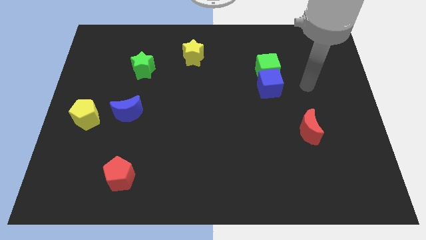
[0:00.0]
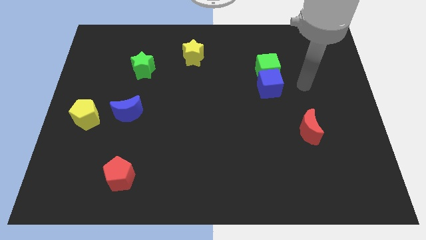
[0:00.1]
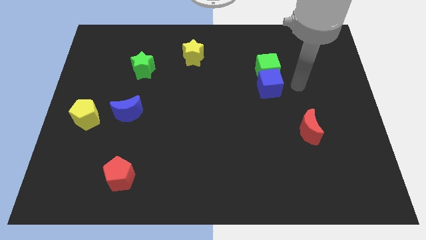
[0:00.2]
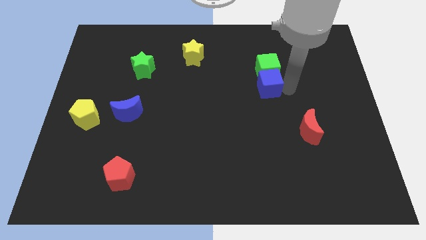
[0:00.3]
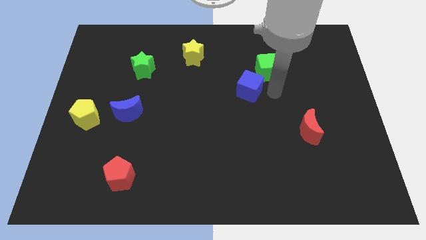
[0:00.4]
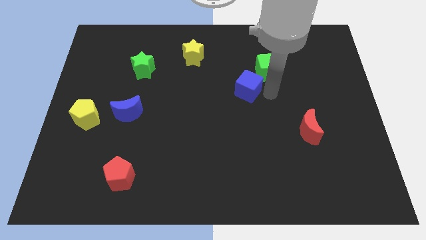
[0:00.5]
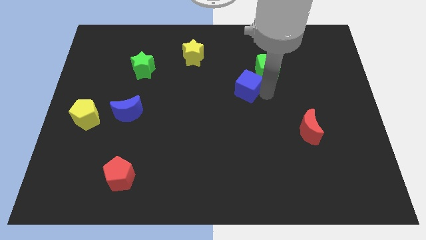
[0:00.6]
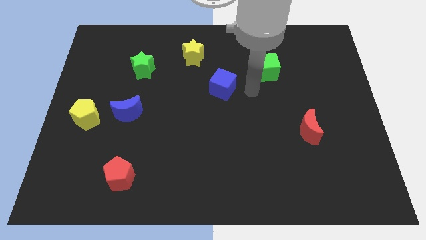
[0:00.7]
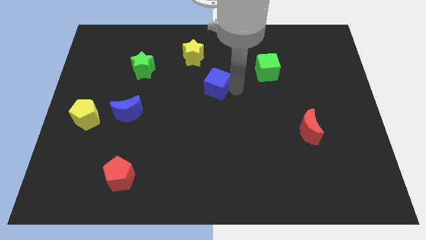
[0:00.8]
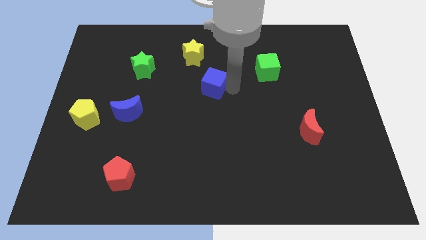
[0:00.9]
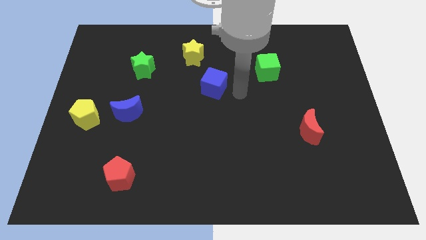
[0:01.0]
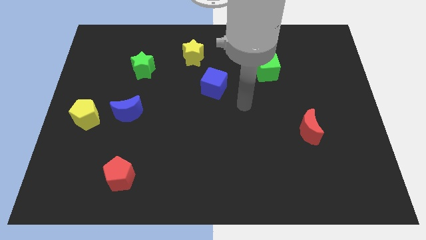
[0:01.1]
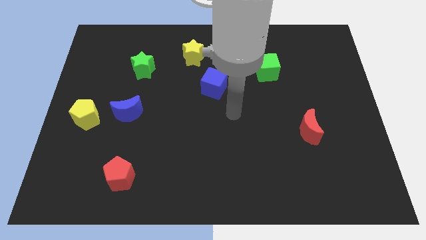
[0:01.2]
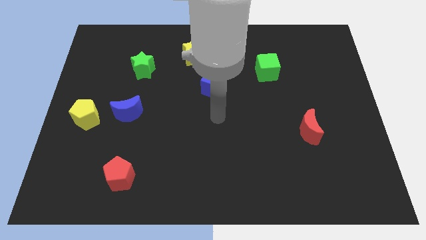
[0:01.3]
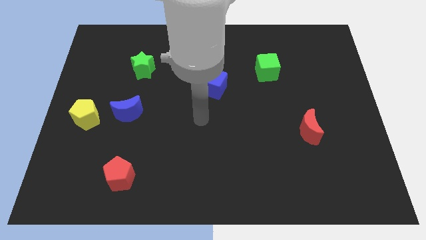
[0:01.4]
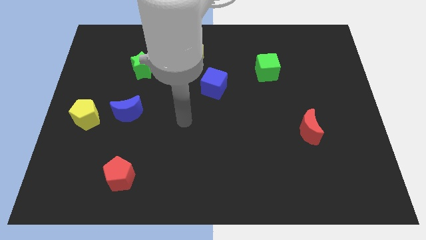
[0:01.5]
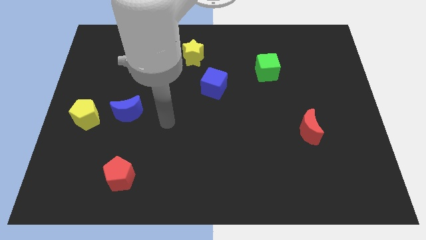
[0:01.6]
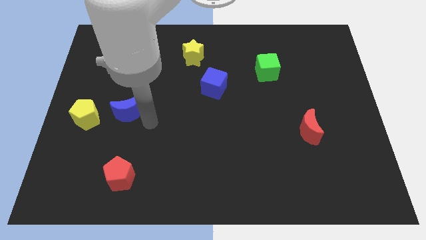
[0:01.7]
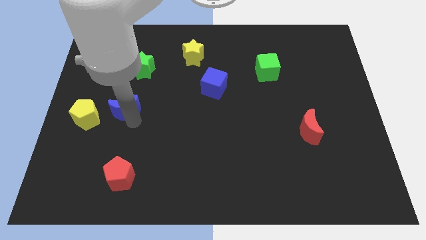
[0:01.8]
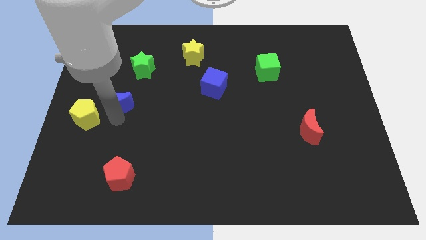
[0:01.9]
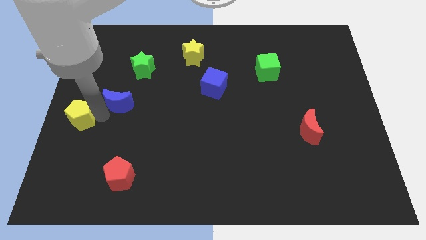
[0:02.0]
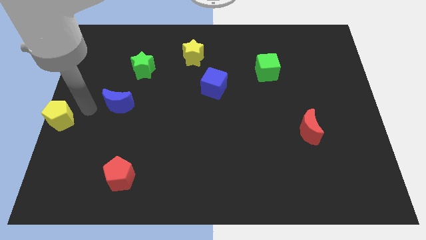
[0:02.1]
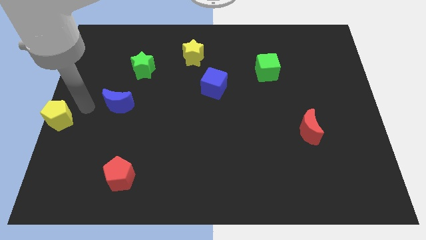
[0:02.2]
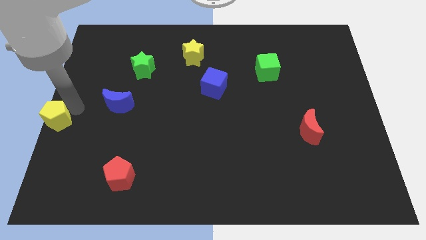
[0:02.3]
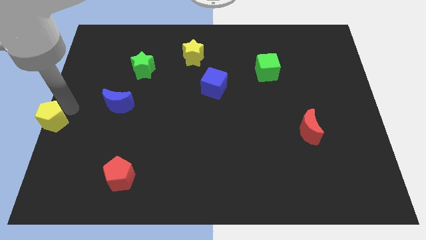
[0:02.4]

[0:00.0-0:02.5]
move your arm away from the blue cube

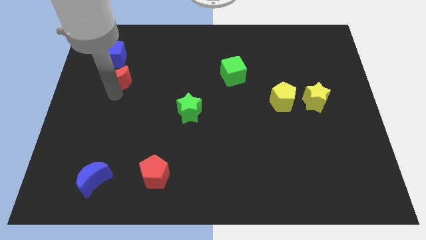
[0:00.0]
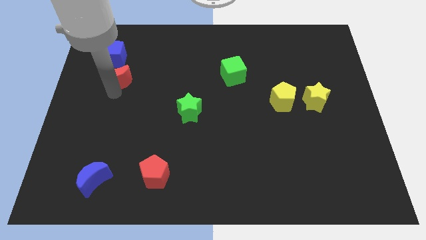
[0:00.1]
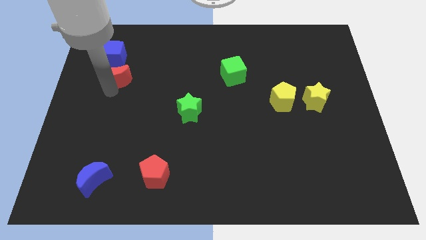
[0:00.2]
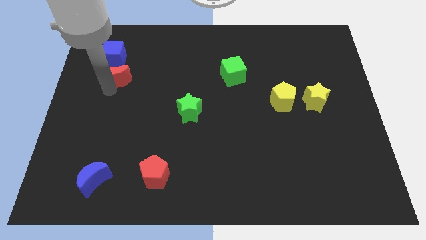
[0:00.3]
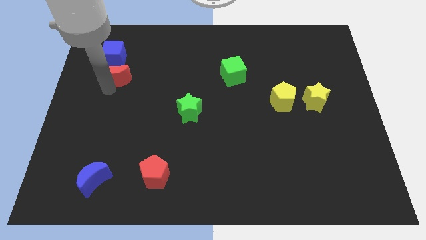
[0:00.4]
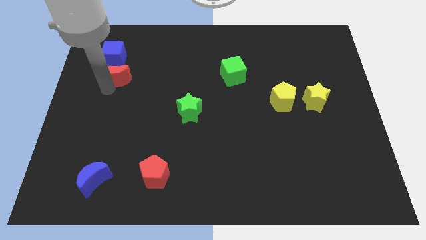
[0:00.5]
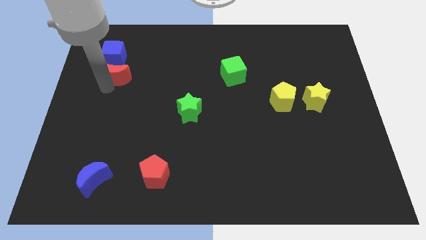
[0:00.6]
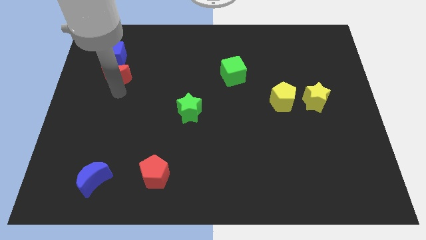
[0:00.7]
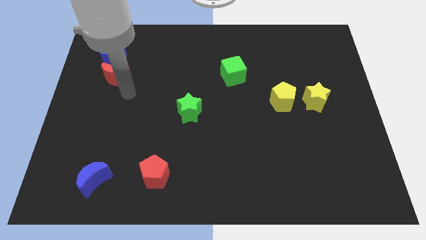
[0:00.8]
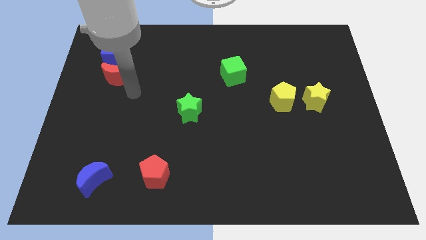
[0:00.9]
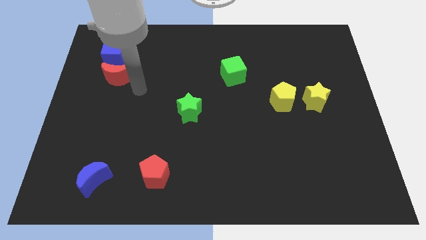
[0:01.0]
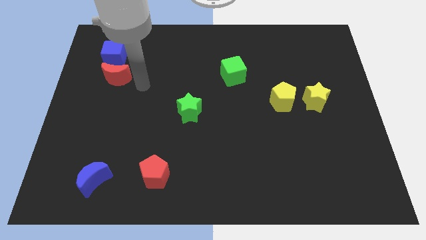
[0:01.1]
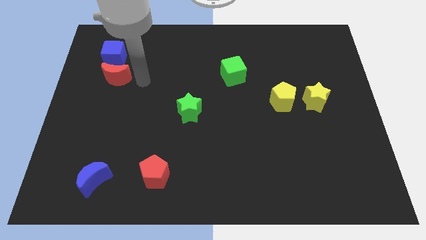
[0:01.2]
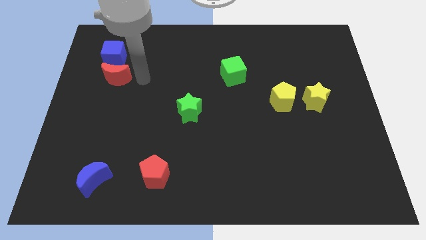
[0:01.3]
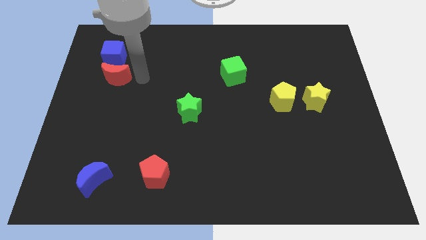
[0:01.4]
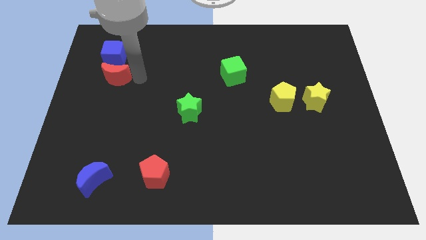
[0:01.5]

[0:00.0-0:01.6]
place the red crescent below the blue cube

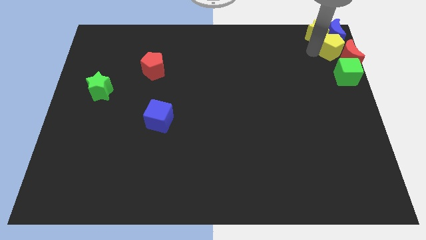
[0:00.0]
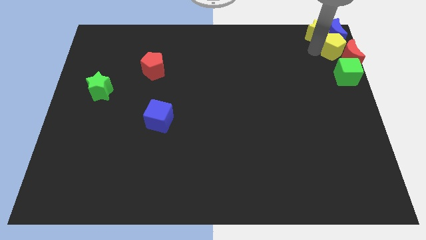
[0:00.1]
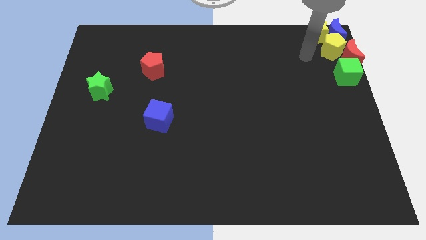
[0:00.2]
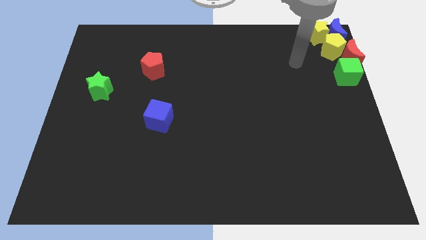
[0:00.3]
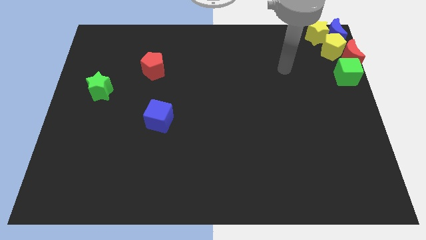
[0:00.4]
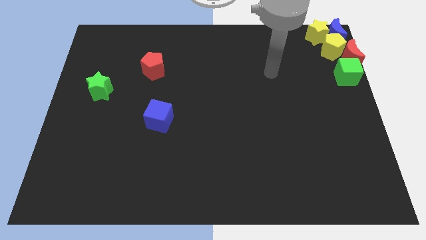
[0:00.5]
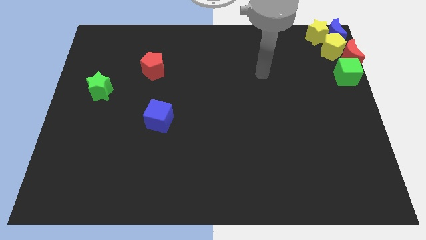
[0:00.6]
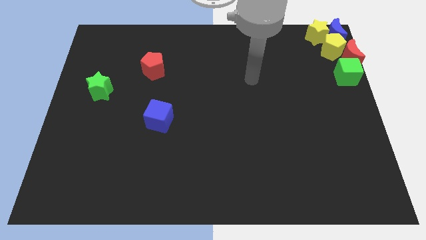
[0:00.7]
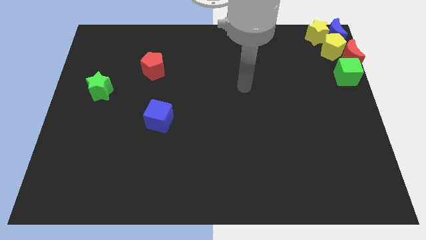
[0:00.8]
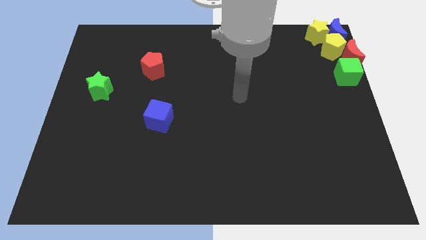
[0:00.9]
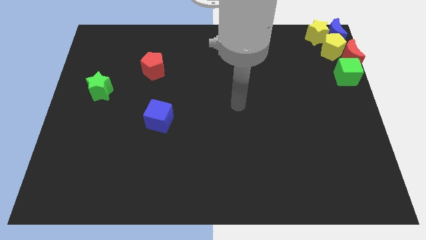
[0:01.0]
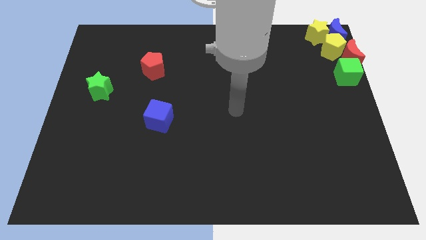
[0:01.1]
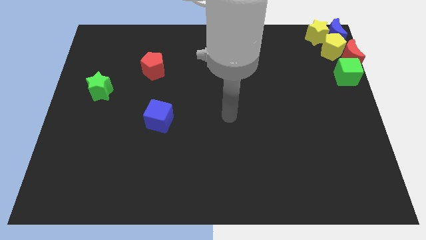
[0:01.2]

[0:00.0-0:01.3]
move the arm away from the yellow pentagon

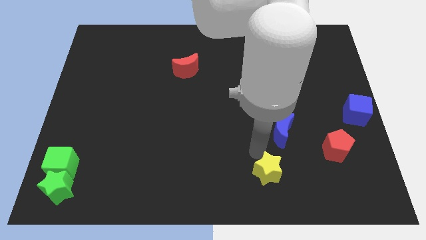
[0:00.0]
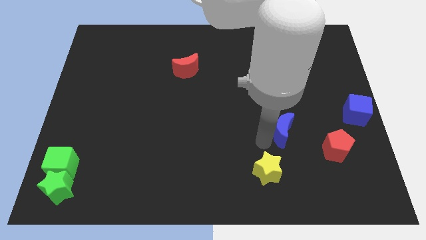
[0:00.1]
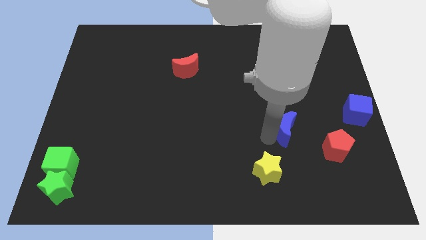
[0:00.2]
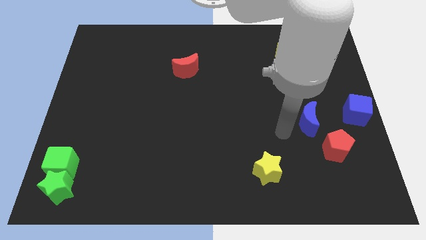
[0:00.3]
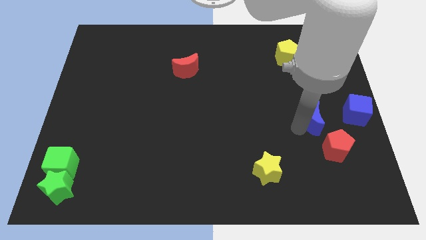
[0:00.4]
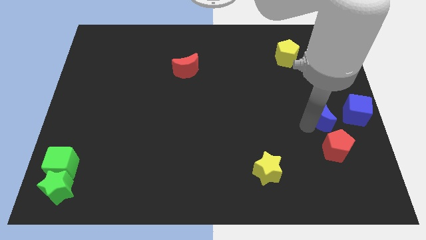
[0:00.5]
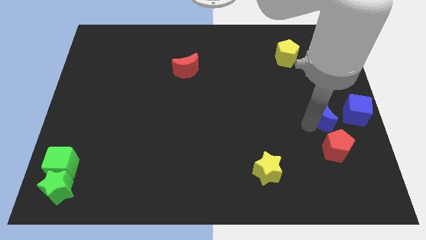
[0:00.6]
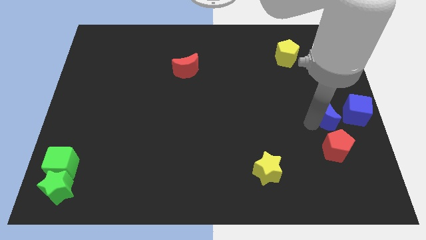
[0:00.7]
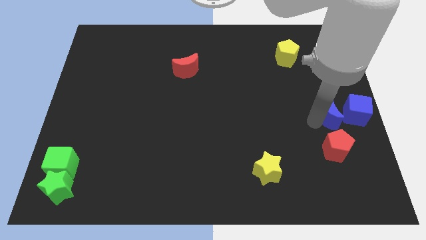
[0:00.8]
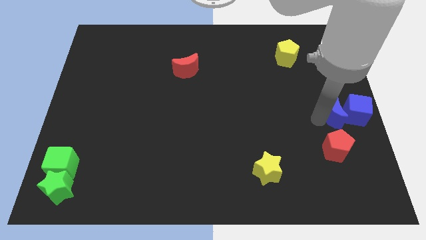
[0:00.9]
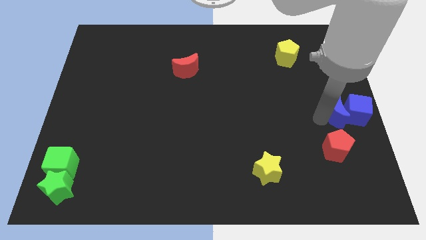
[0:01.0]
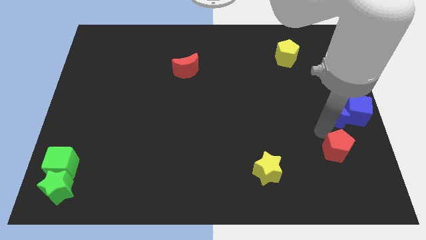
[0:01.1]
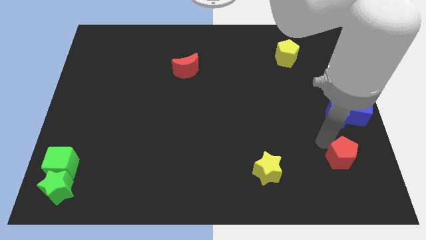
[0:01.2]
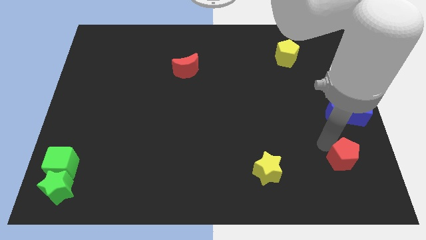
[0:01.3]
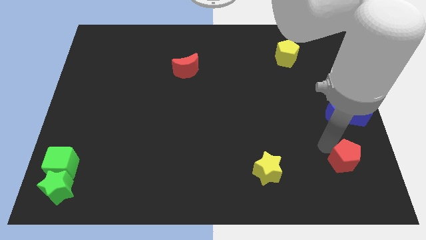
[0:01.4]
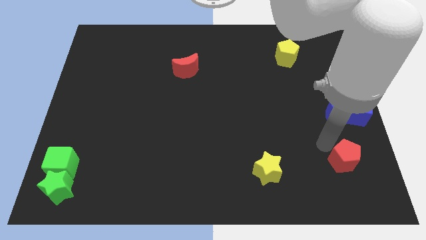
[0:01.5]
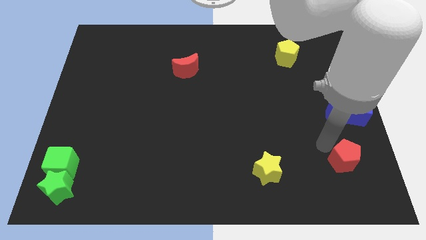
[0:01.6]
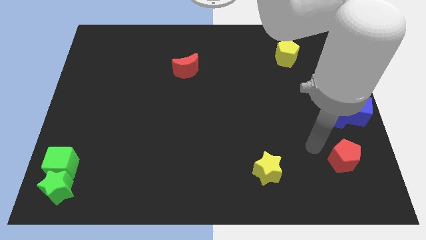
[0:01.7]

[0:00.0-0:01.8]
move the blue moon to the right of the blue cube

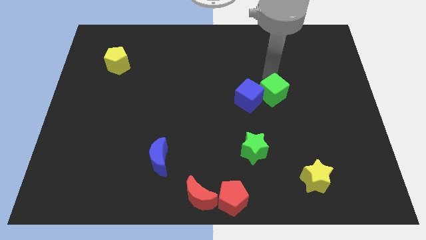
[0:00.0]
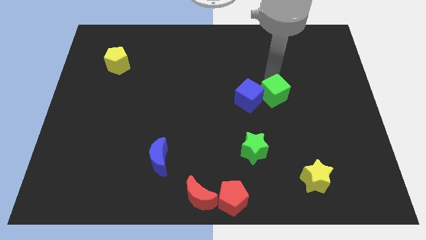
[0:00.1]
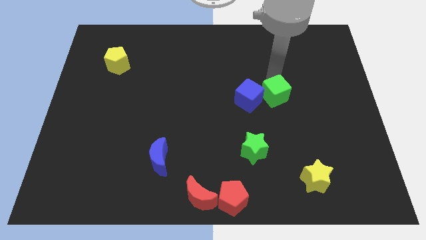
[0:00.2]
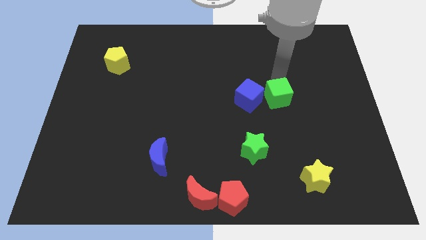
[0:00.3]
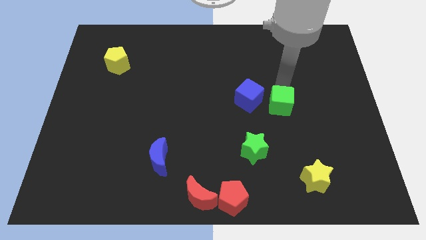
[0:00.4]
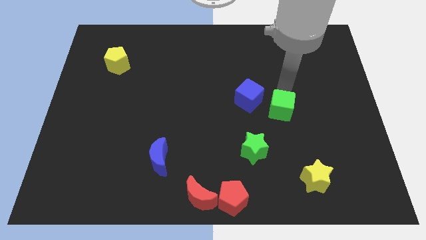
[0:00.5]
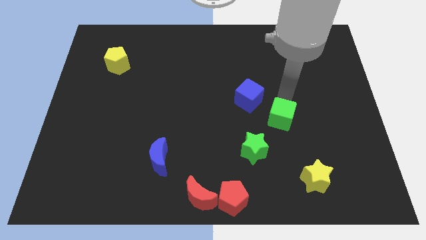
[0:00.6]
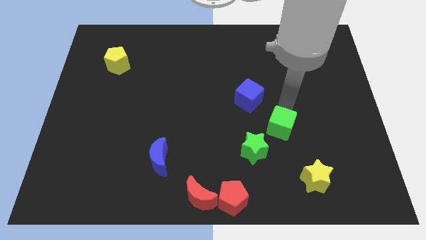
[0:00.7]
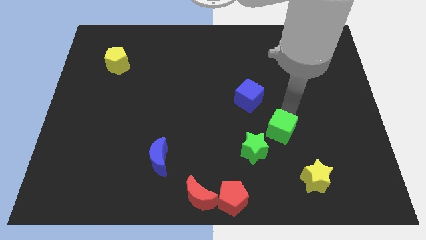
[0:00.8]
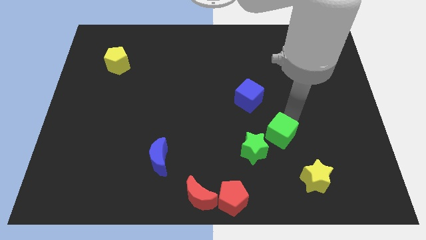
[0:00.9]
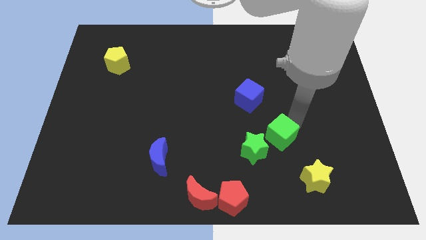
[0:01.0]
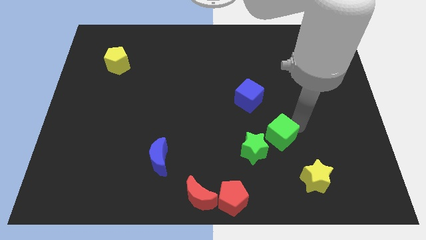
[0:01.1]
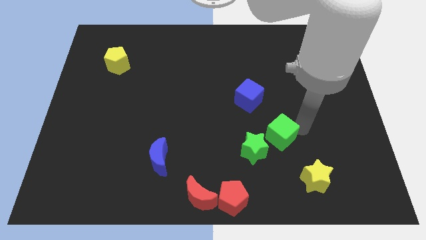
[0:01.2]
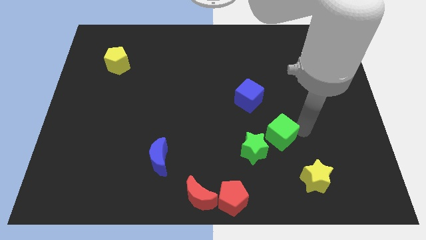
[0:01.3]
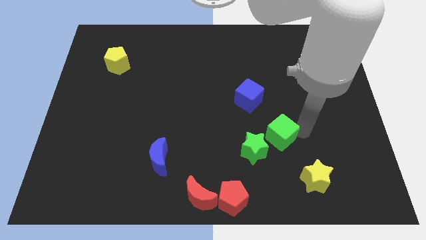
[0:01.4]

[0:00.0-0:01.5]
separate the green cube from the blue cube

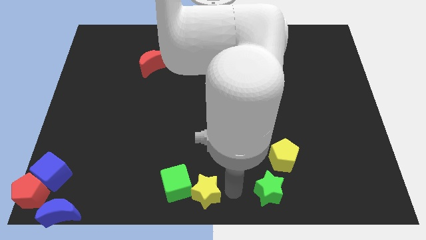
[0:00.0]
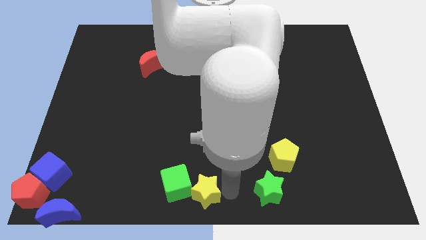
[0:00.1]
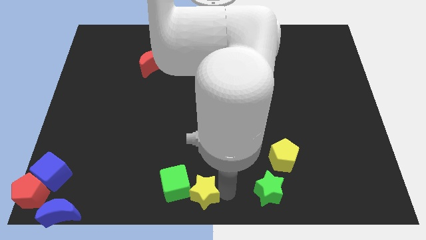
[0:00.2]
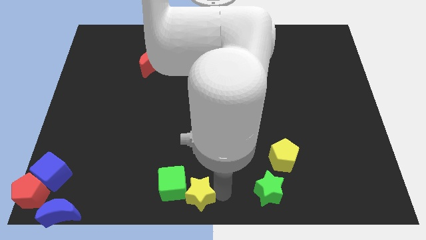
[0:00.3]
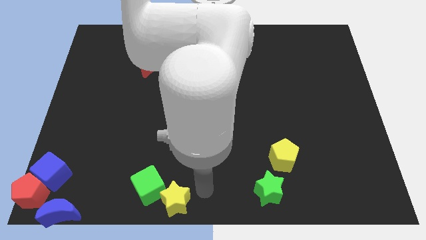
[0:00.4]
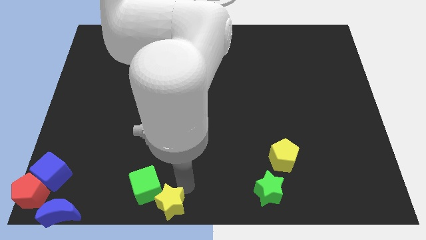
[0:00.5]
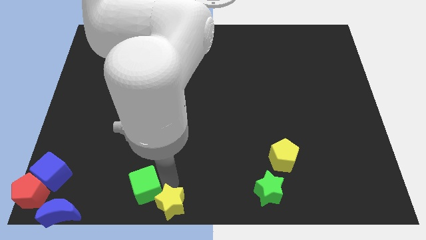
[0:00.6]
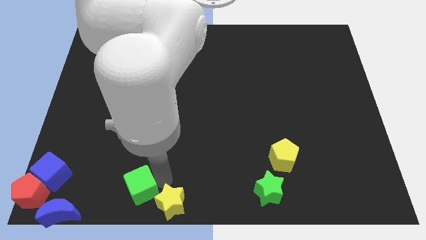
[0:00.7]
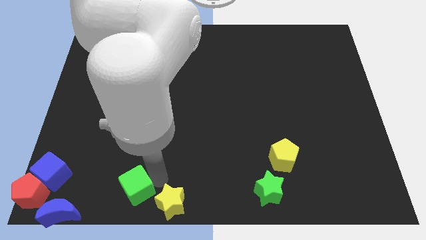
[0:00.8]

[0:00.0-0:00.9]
push yellow star in to green cube
